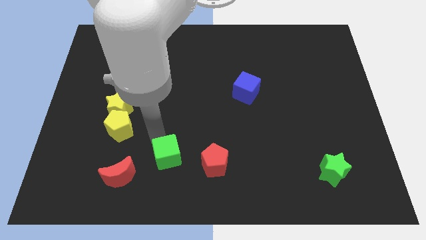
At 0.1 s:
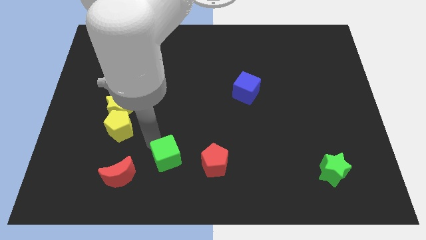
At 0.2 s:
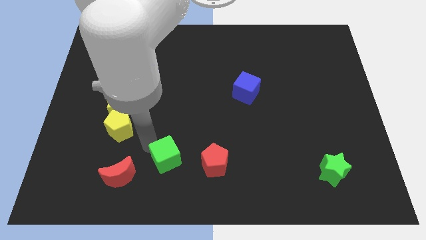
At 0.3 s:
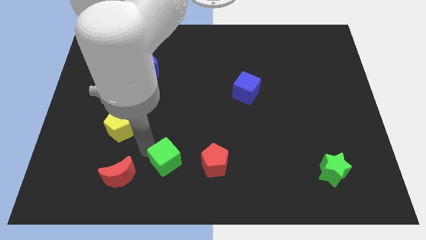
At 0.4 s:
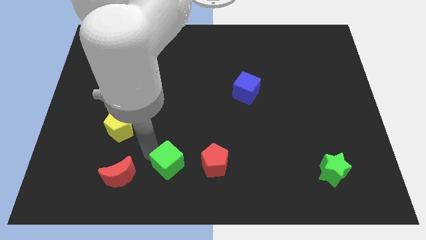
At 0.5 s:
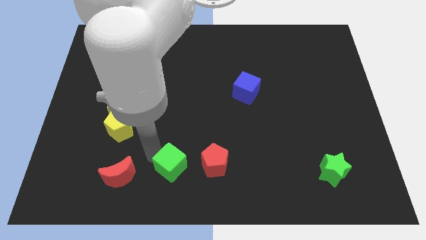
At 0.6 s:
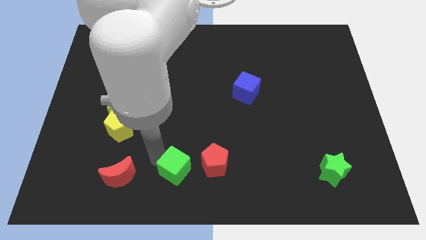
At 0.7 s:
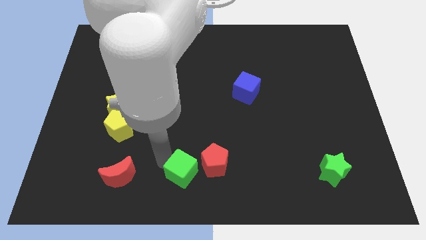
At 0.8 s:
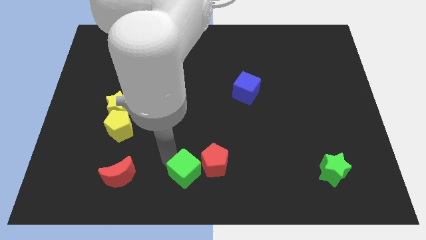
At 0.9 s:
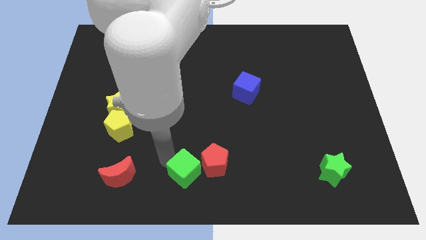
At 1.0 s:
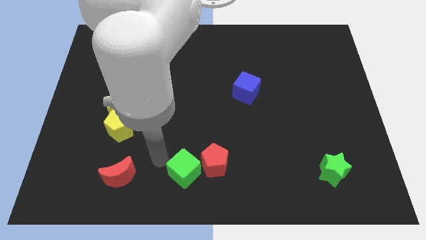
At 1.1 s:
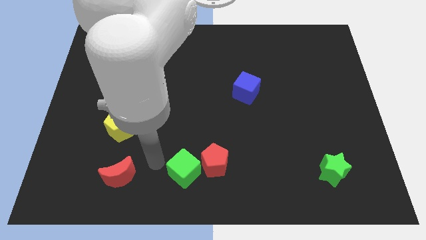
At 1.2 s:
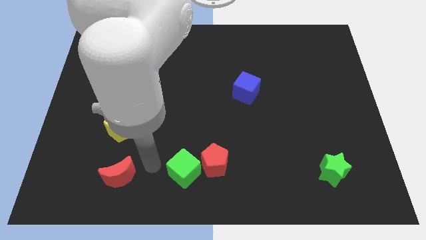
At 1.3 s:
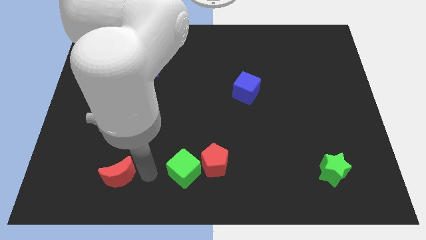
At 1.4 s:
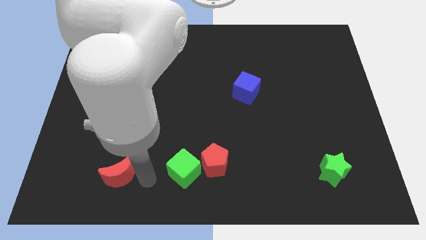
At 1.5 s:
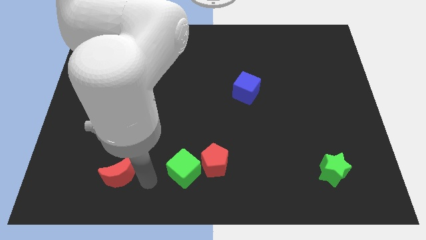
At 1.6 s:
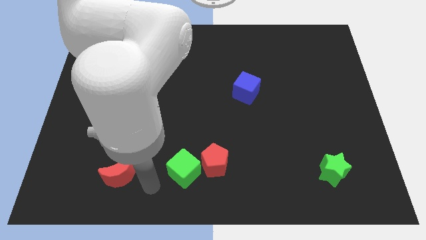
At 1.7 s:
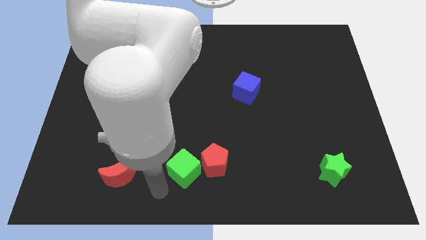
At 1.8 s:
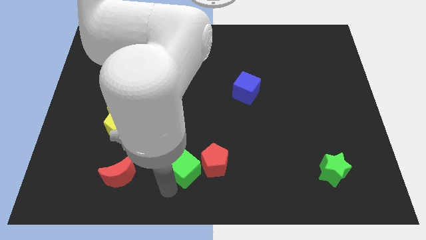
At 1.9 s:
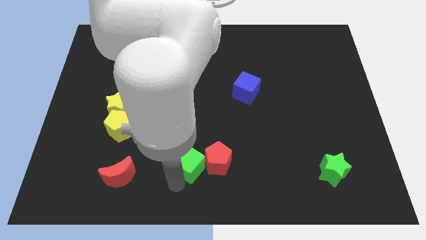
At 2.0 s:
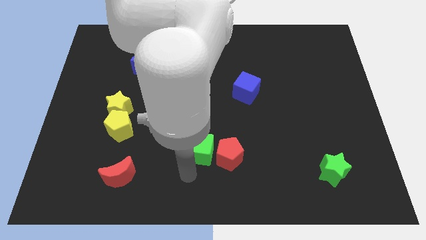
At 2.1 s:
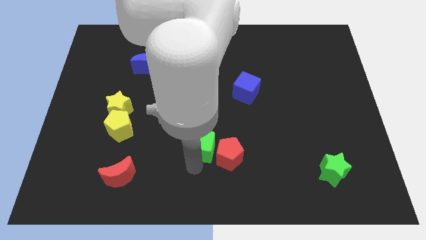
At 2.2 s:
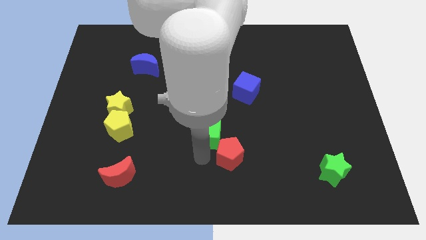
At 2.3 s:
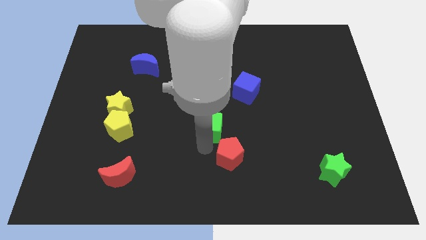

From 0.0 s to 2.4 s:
move the green cube diagonally top left to the red pentagon

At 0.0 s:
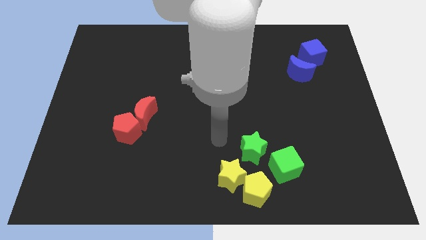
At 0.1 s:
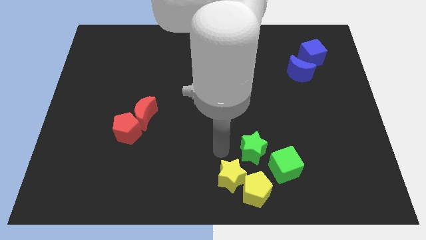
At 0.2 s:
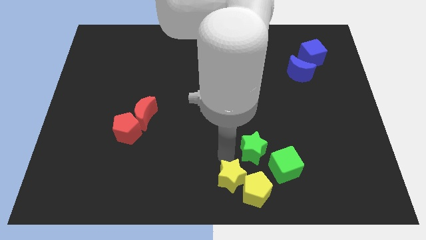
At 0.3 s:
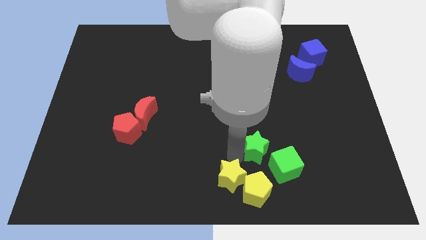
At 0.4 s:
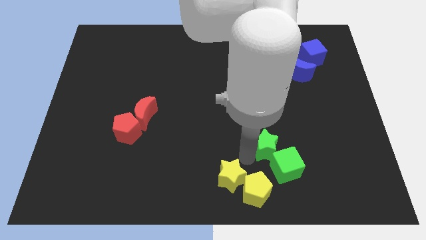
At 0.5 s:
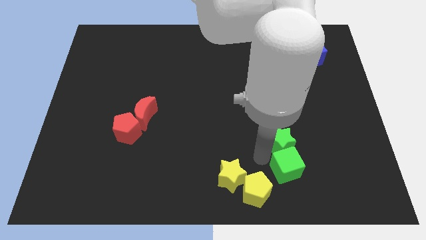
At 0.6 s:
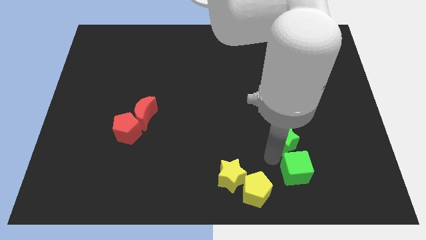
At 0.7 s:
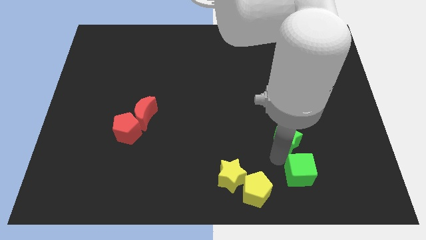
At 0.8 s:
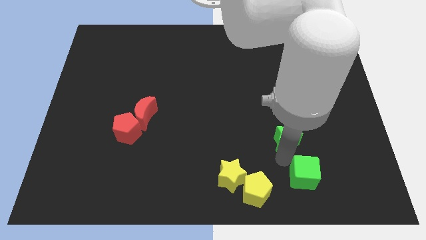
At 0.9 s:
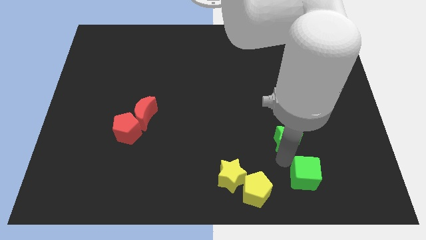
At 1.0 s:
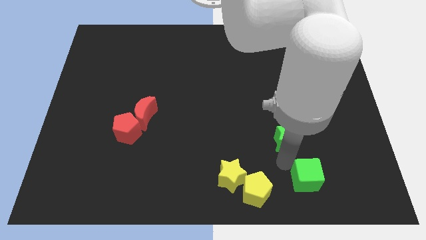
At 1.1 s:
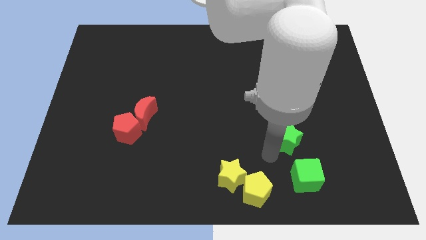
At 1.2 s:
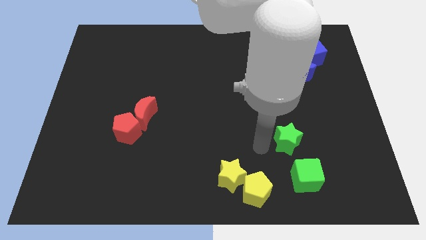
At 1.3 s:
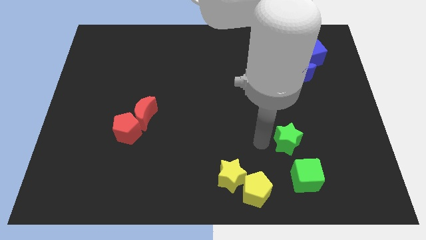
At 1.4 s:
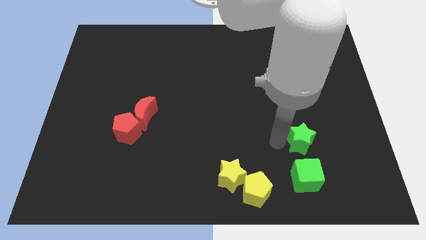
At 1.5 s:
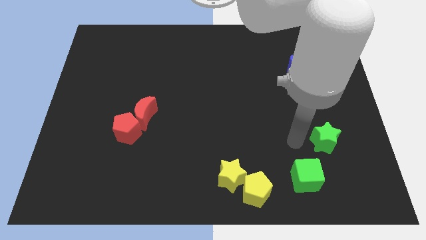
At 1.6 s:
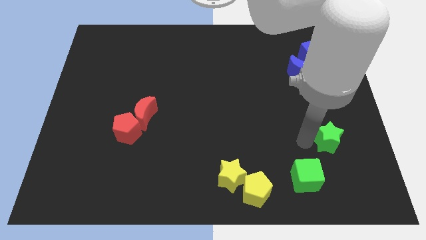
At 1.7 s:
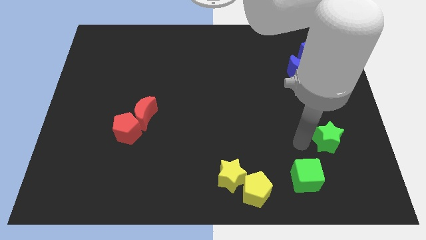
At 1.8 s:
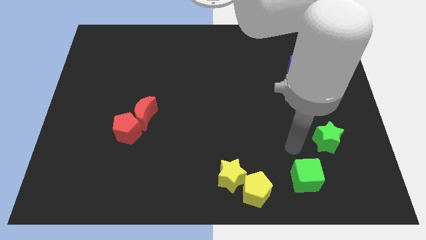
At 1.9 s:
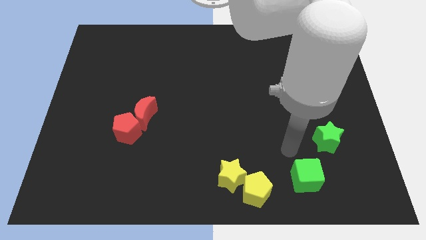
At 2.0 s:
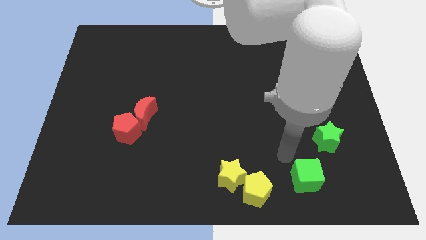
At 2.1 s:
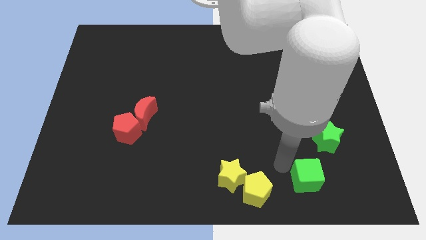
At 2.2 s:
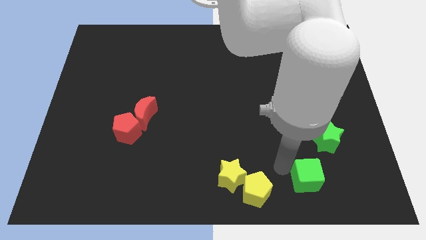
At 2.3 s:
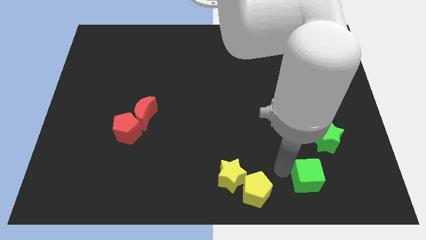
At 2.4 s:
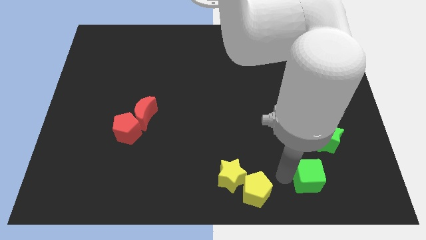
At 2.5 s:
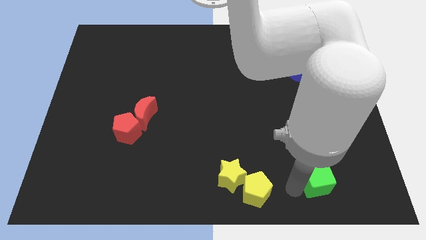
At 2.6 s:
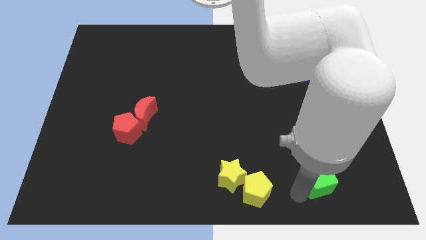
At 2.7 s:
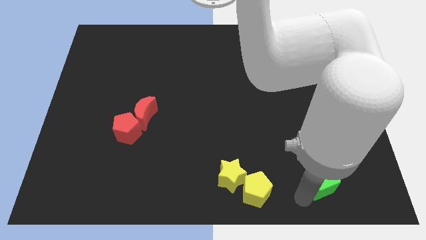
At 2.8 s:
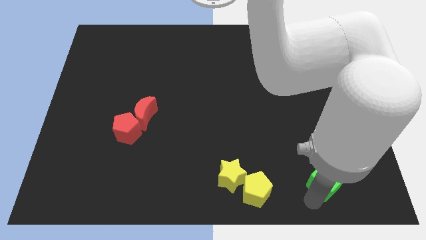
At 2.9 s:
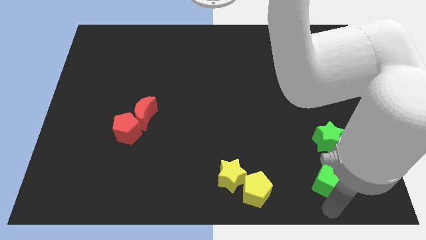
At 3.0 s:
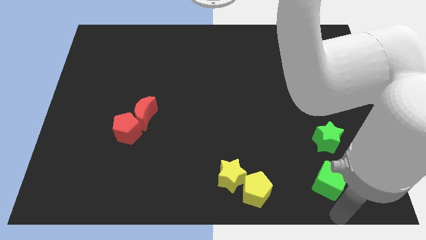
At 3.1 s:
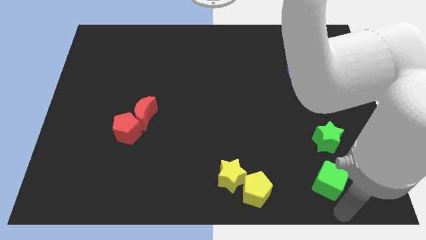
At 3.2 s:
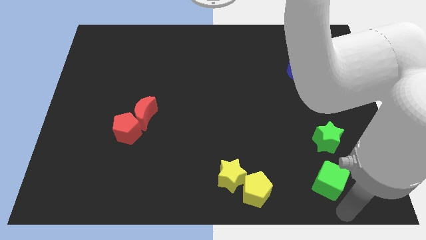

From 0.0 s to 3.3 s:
place green blocks in vertical line

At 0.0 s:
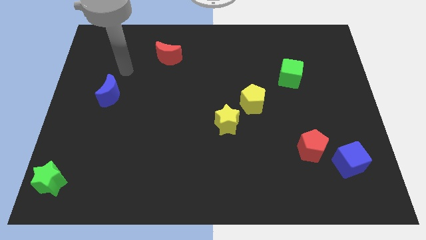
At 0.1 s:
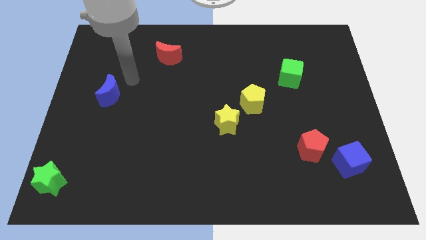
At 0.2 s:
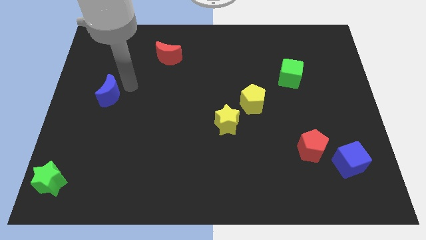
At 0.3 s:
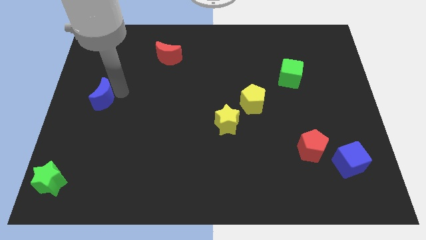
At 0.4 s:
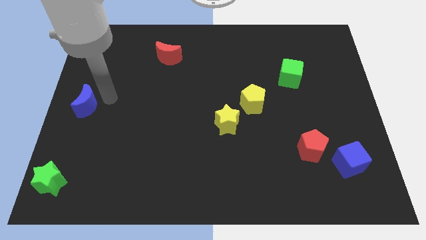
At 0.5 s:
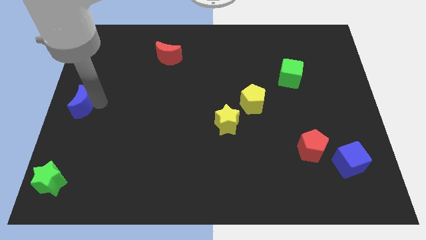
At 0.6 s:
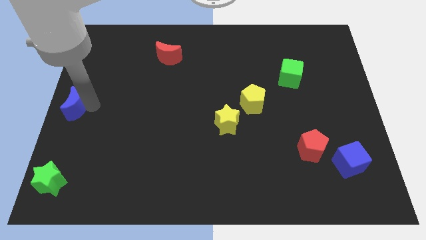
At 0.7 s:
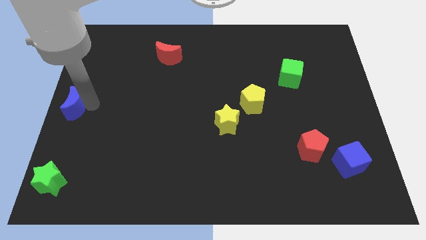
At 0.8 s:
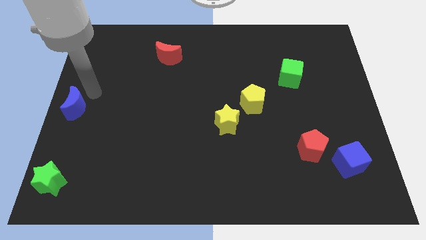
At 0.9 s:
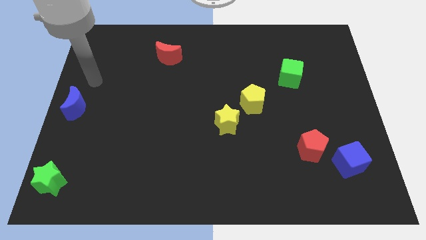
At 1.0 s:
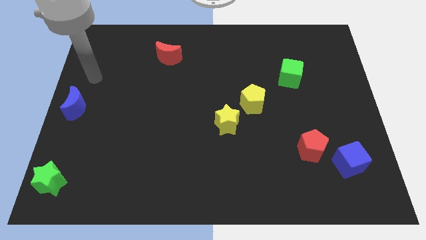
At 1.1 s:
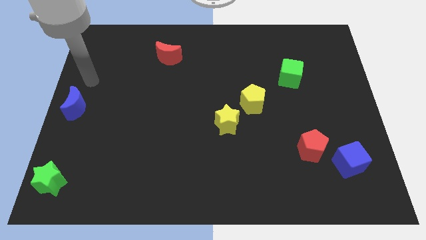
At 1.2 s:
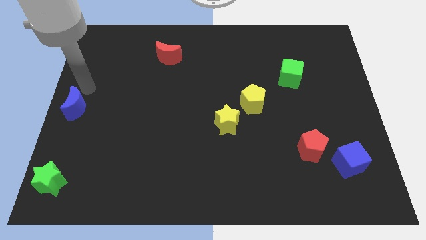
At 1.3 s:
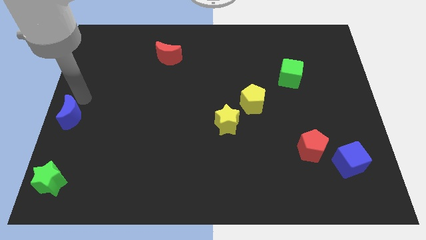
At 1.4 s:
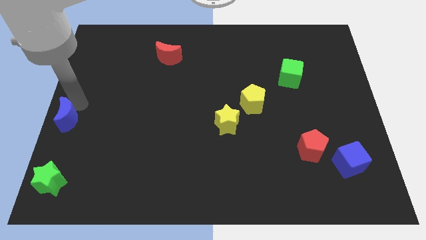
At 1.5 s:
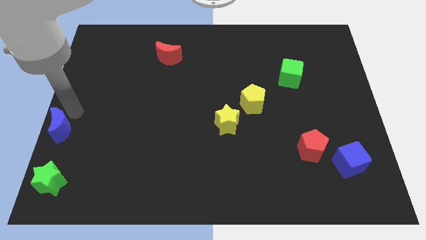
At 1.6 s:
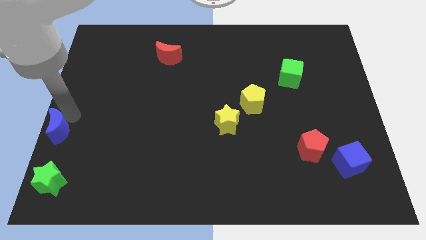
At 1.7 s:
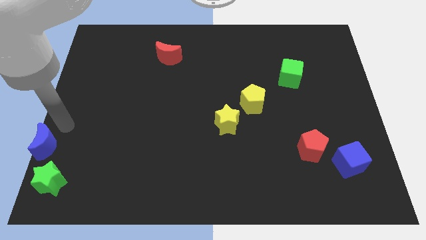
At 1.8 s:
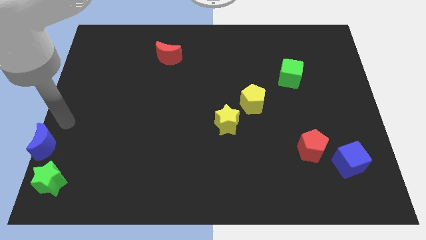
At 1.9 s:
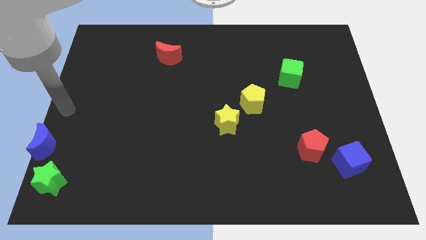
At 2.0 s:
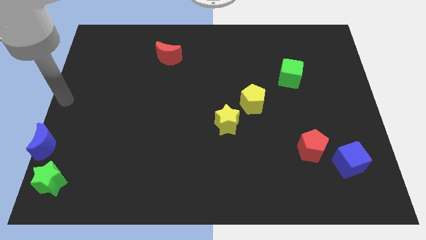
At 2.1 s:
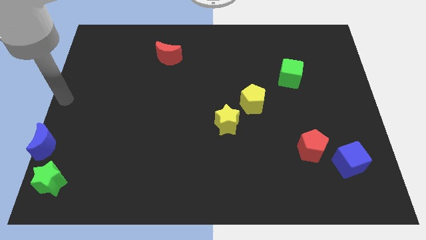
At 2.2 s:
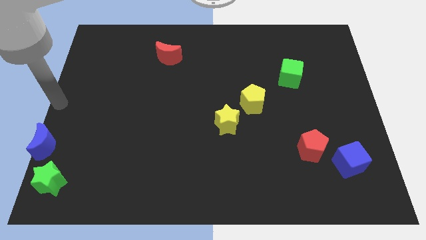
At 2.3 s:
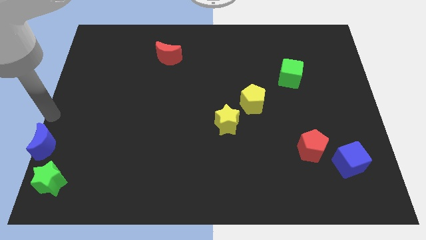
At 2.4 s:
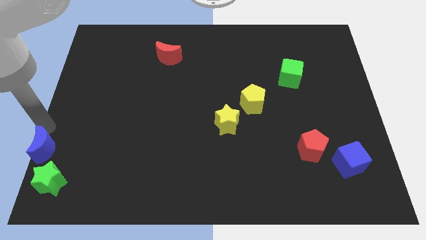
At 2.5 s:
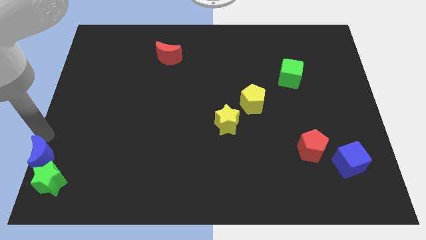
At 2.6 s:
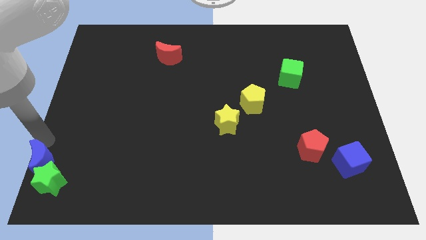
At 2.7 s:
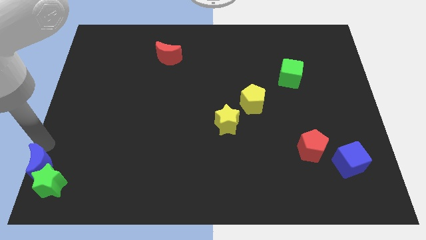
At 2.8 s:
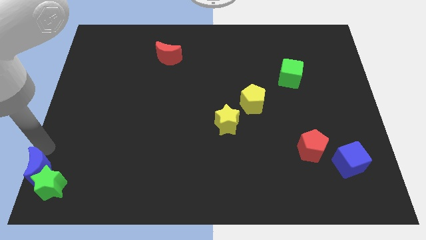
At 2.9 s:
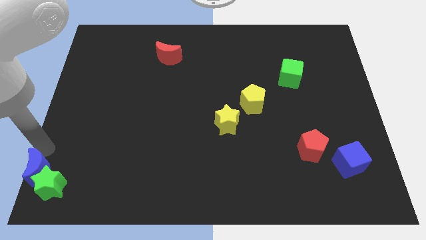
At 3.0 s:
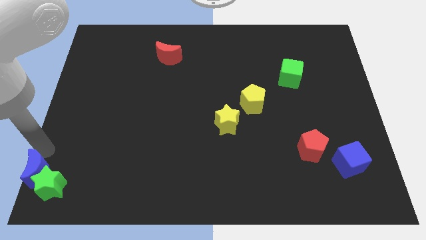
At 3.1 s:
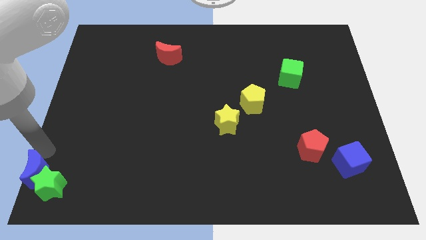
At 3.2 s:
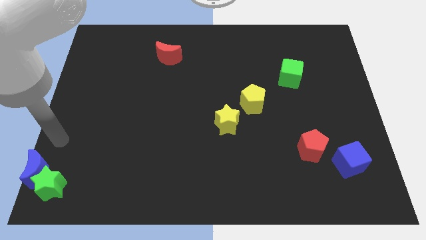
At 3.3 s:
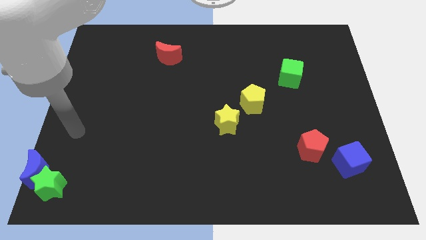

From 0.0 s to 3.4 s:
push the blue moon into green star
